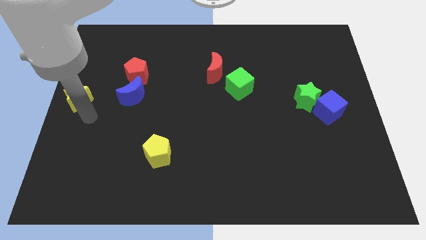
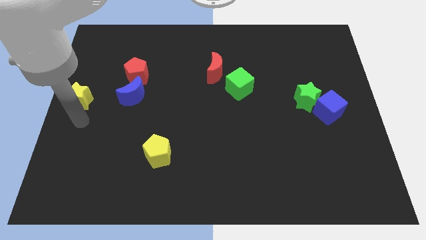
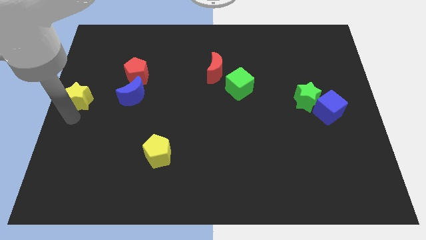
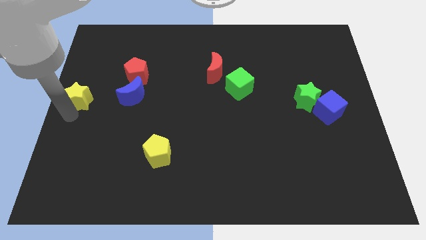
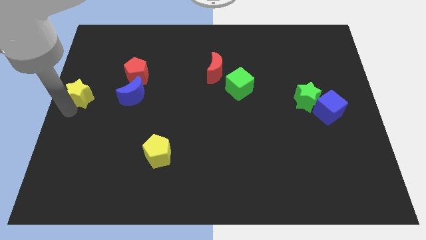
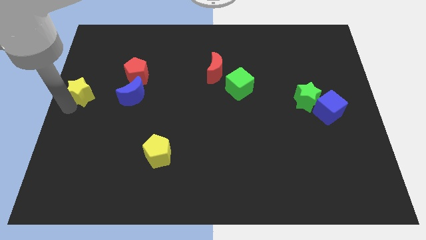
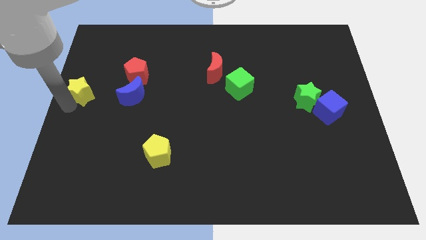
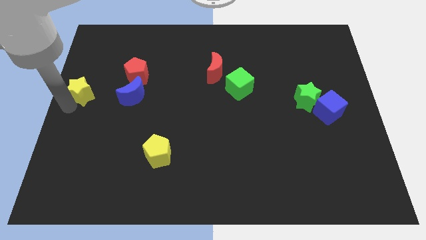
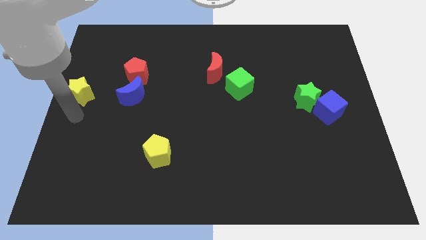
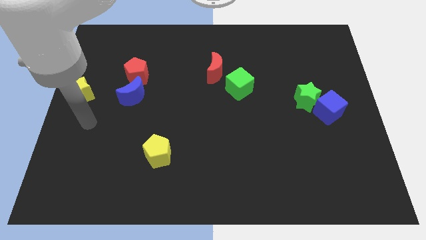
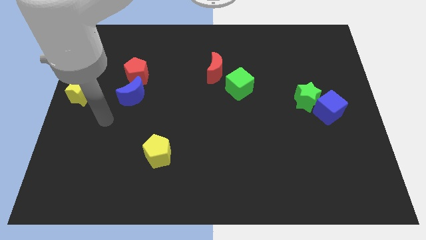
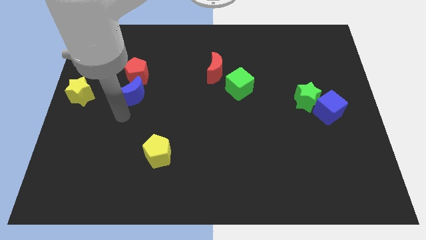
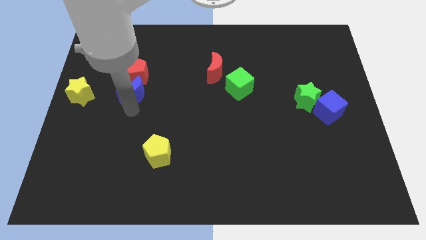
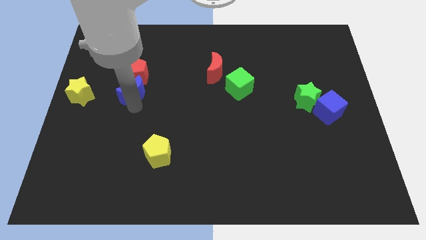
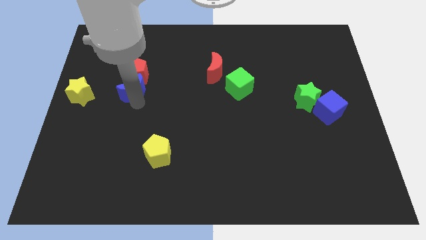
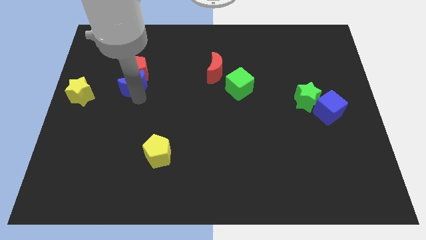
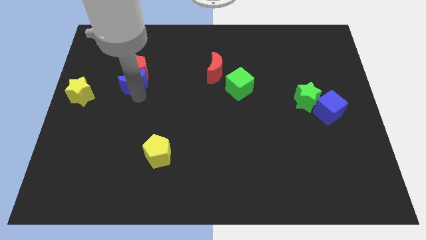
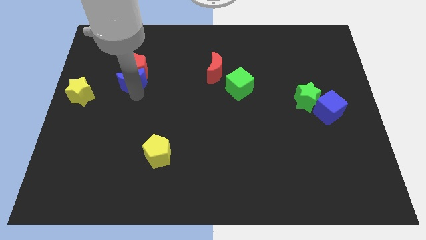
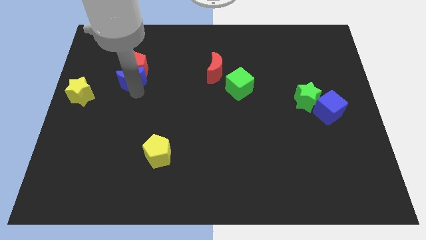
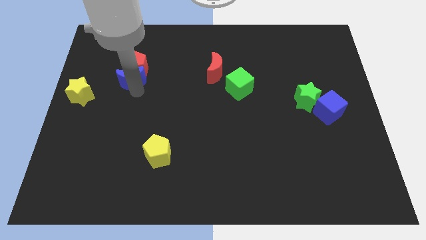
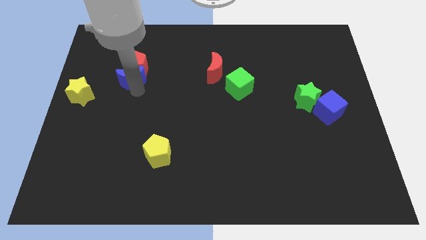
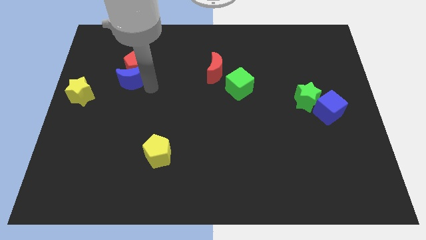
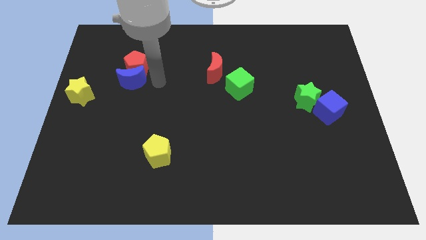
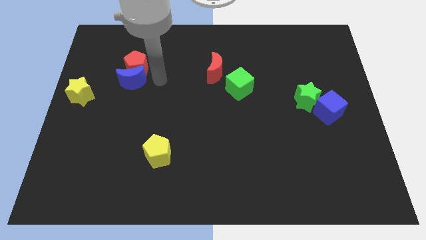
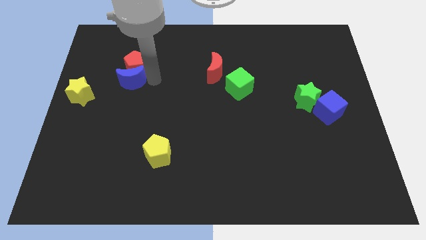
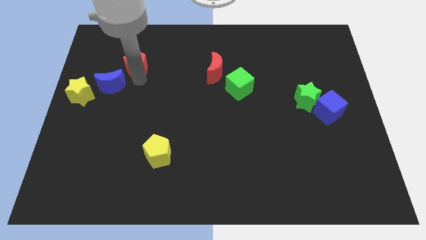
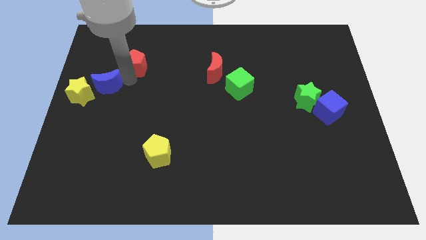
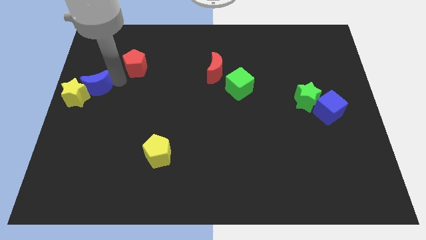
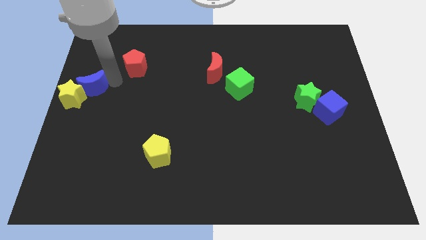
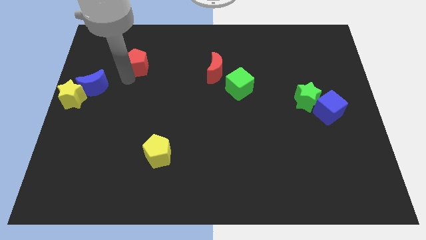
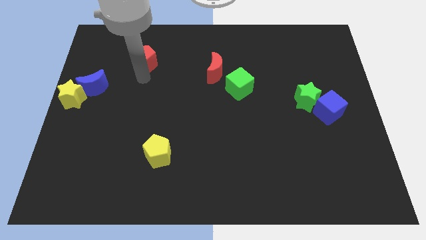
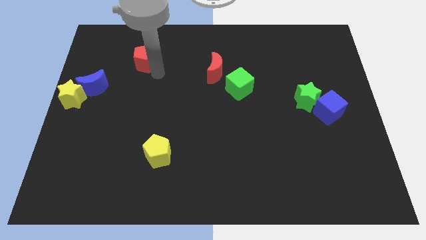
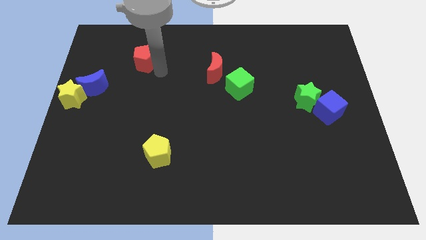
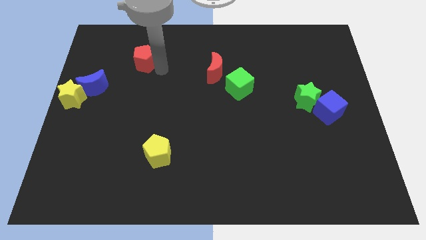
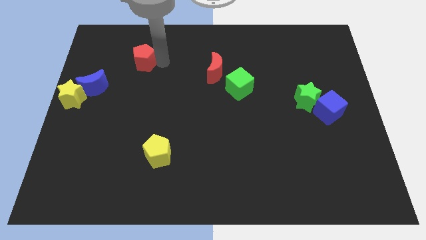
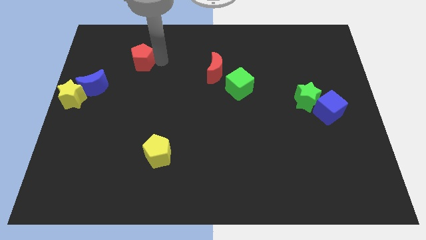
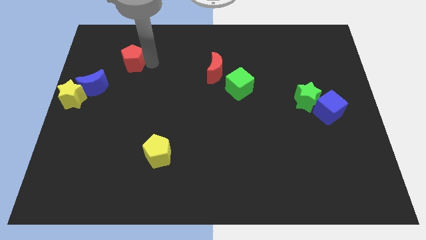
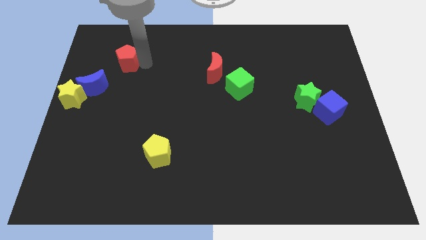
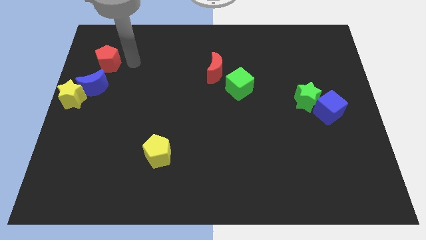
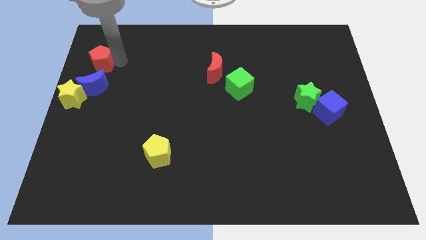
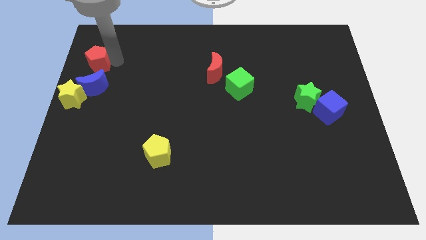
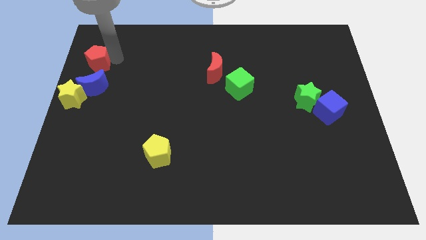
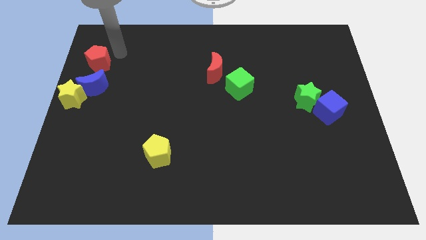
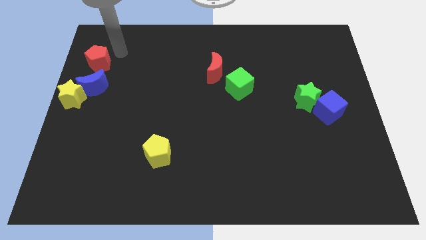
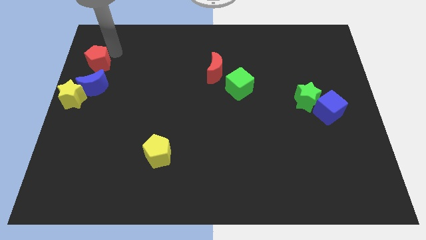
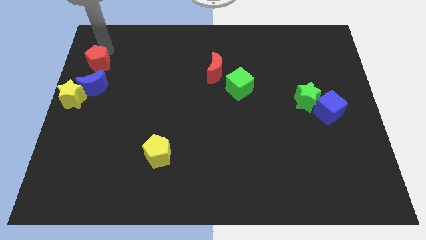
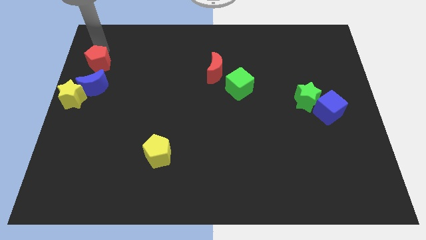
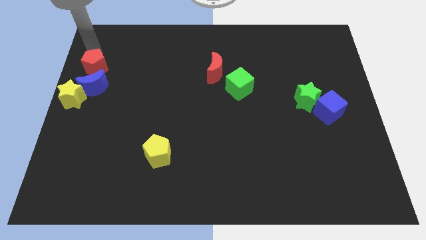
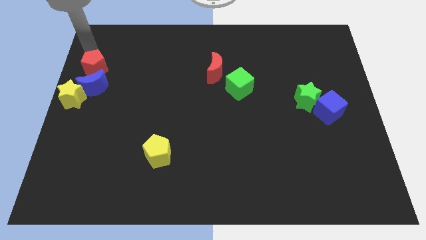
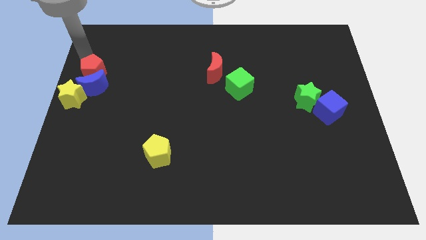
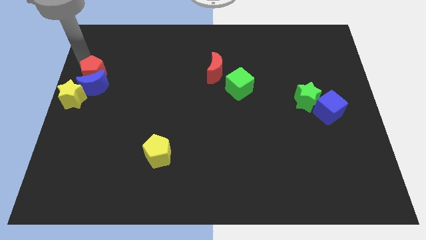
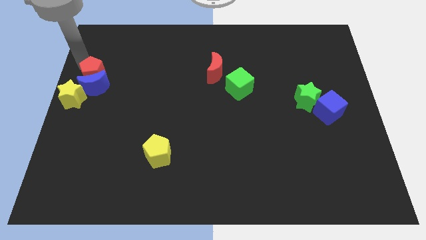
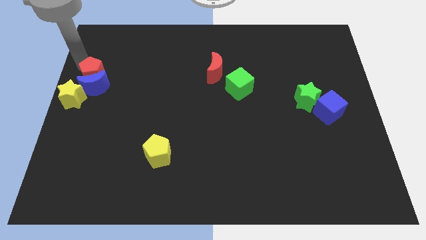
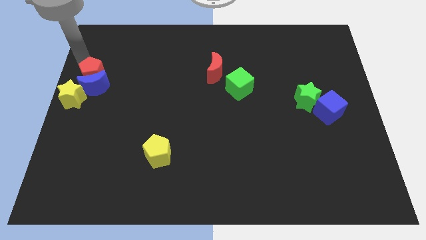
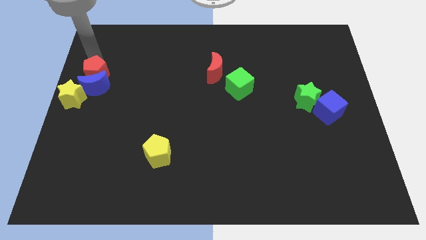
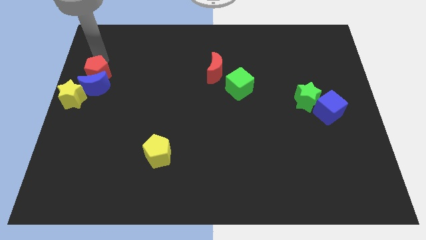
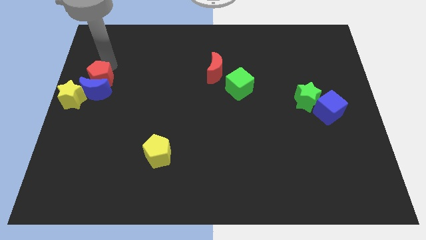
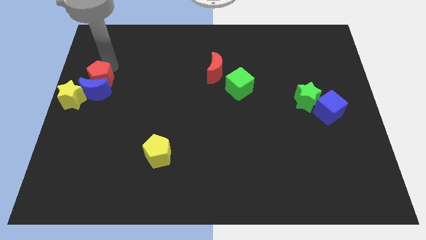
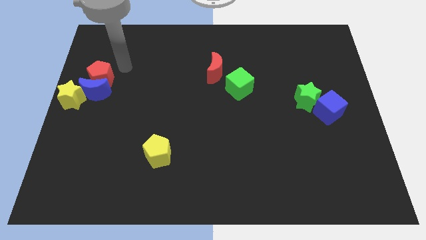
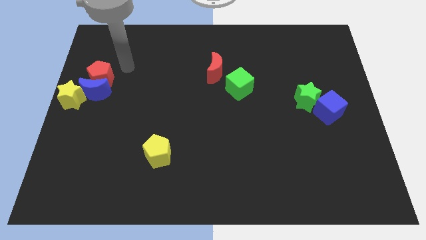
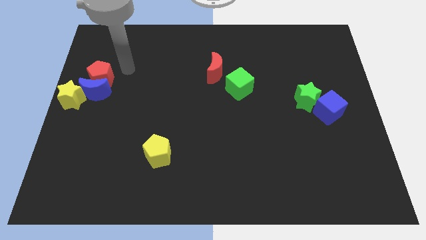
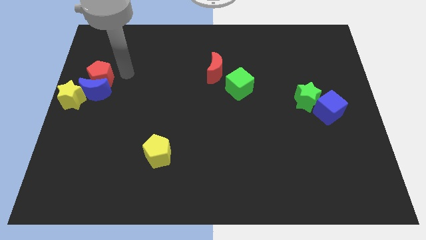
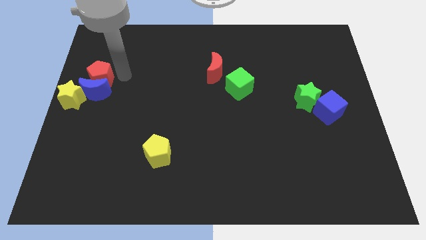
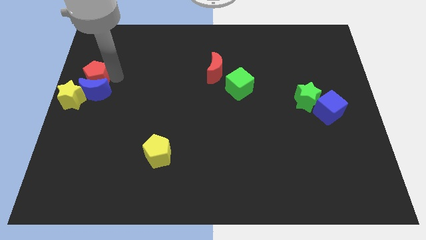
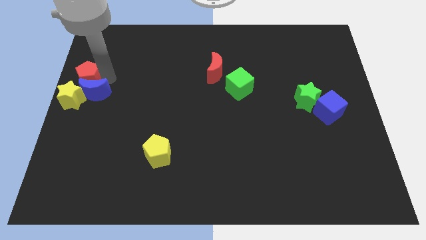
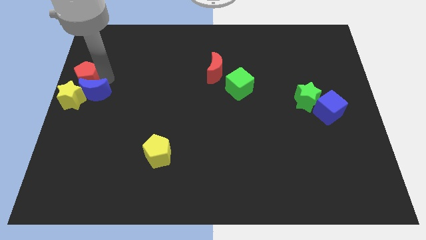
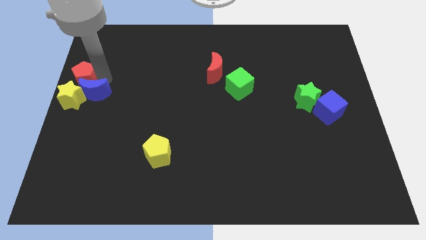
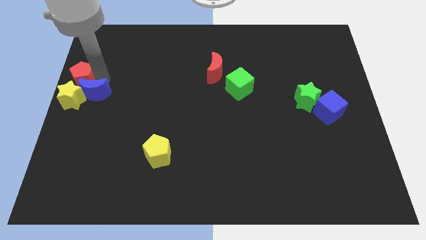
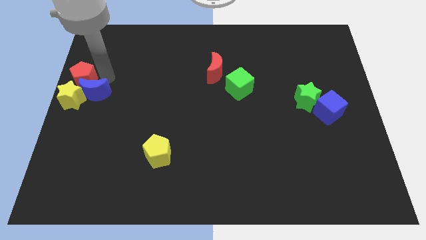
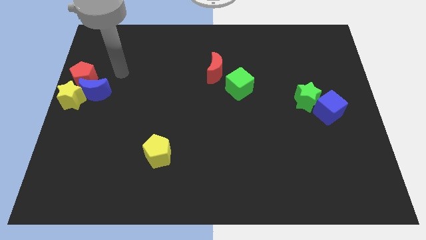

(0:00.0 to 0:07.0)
group up the yellow star blue crescent and red pentagon at the center left of the board

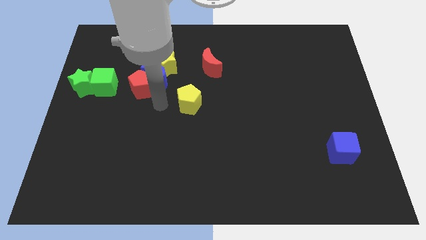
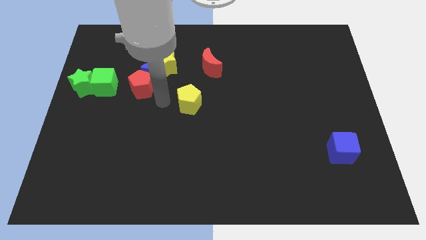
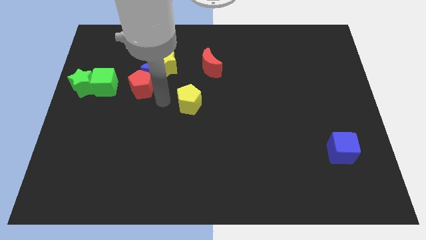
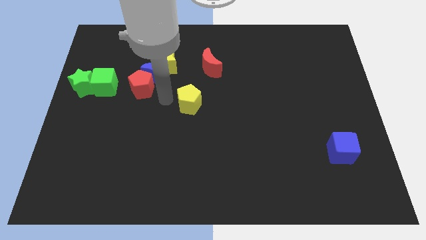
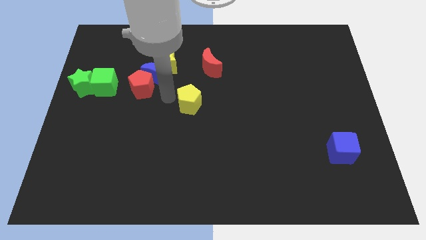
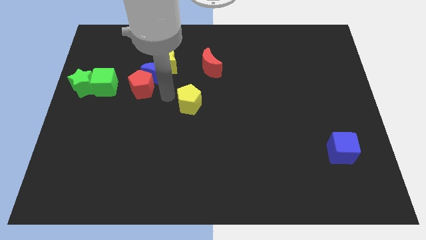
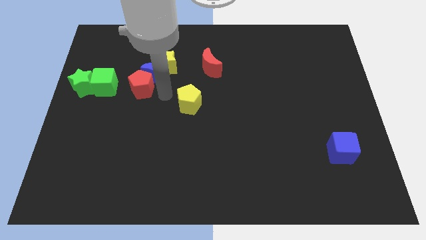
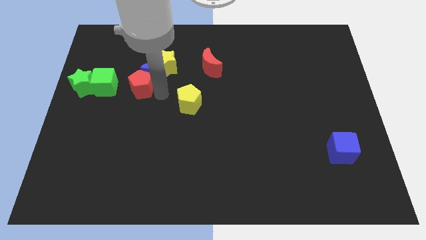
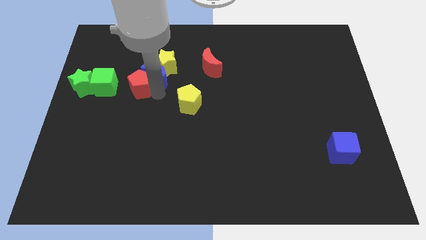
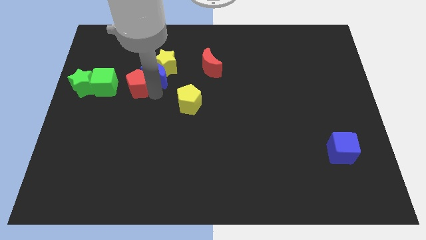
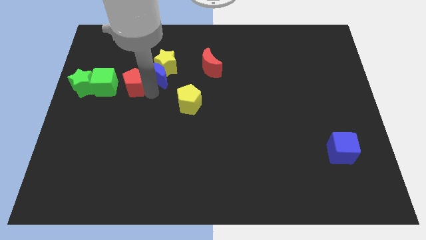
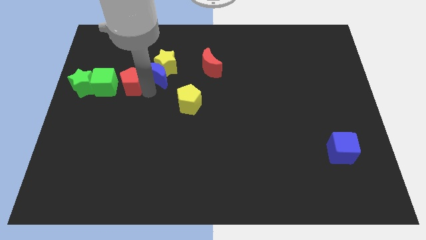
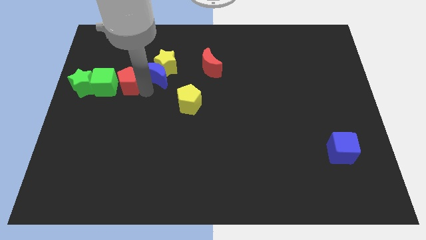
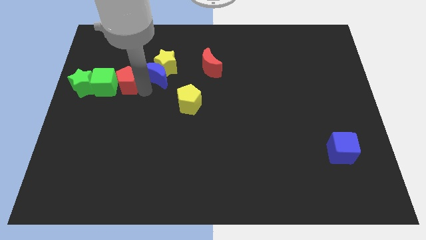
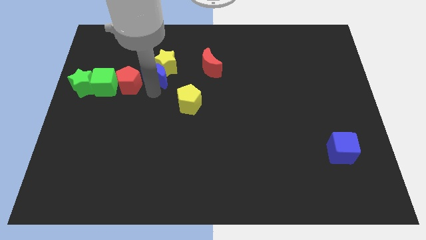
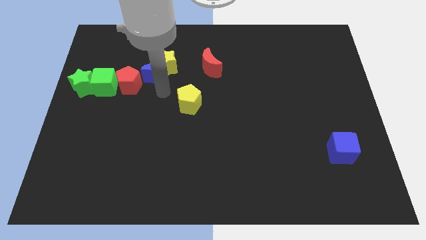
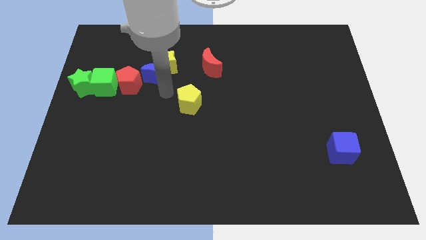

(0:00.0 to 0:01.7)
move the red pentagon close to the right of the green cube

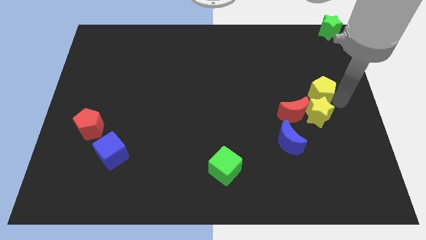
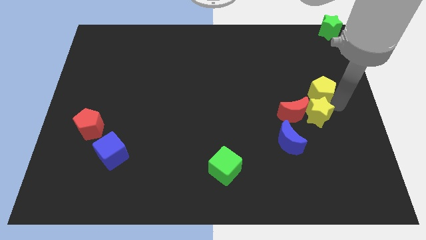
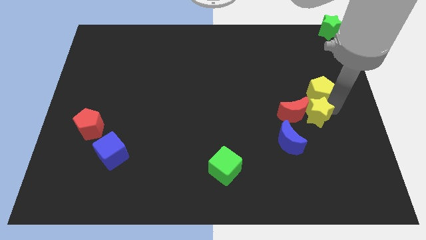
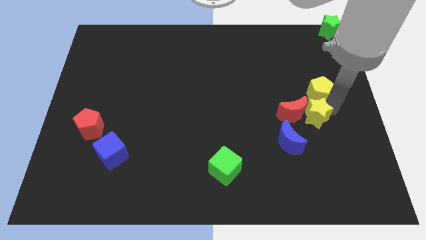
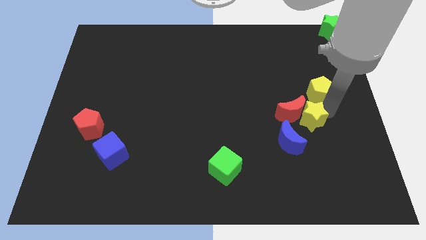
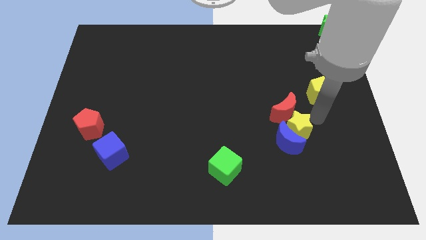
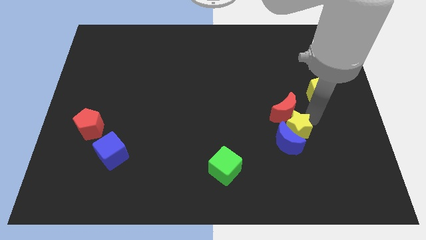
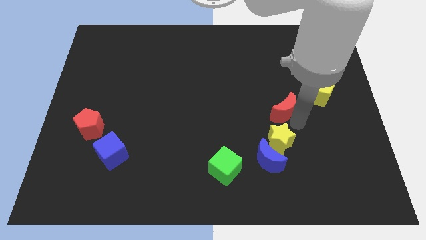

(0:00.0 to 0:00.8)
separate the yellow star from yellow pentagon
